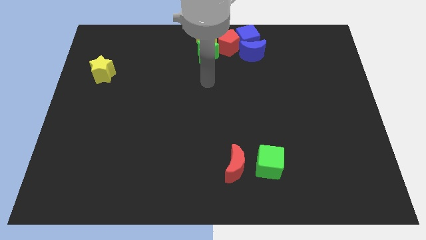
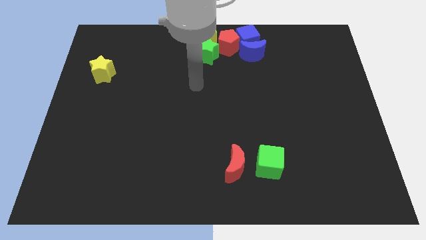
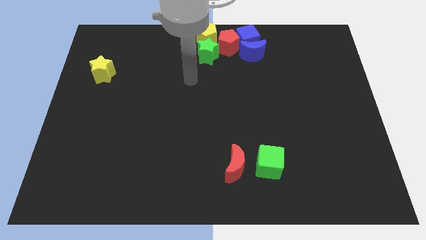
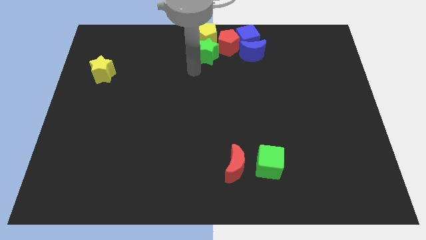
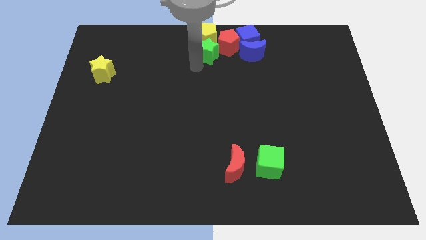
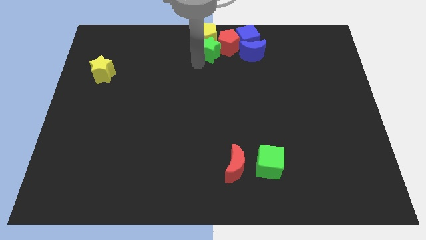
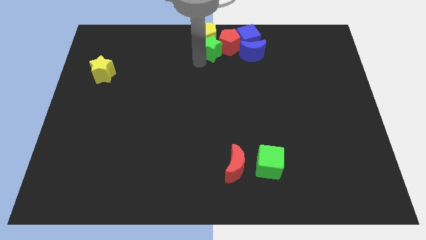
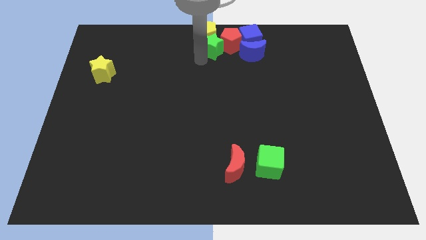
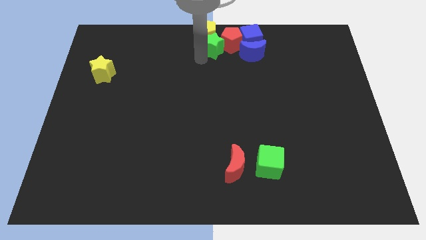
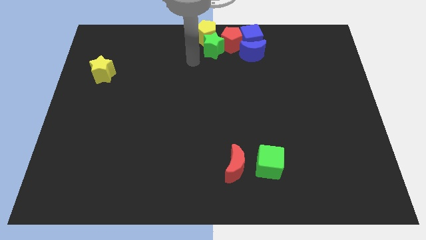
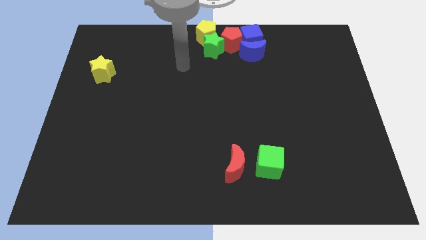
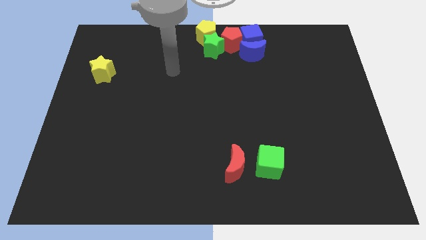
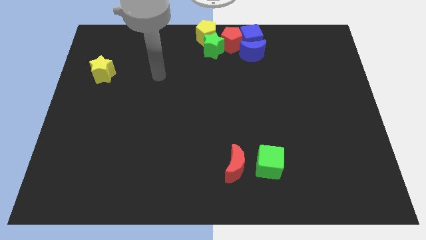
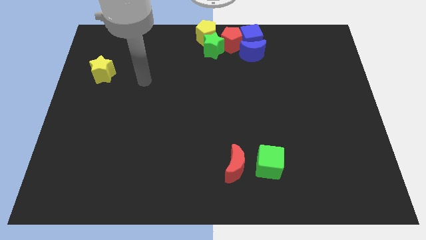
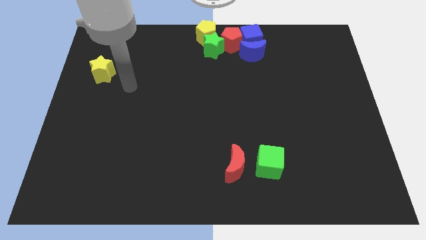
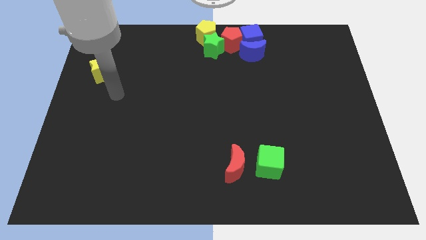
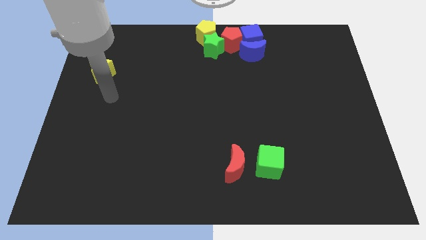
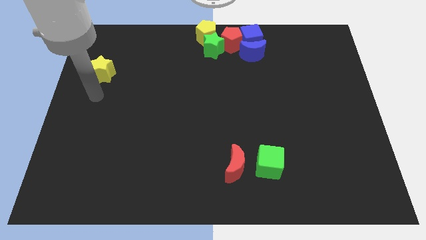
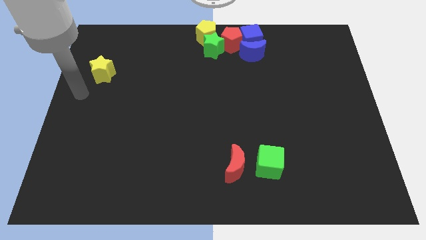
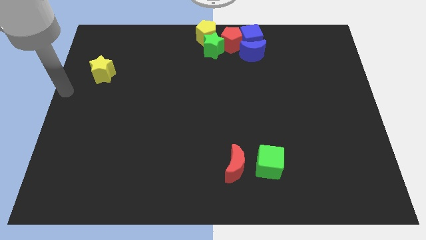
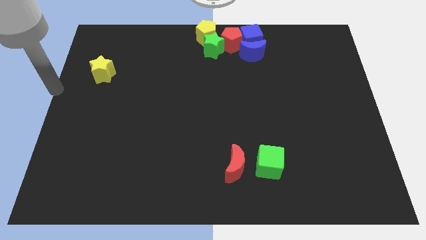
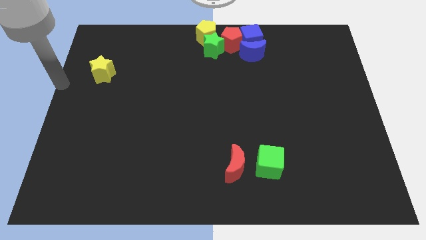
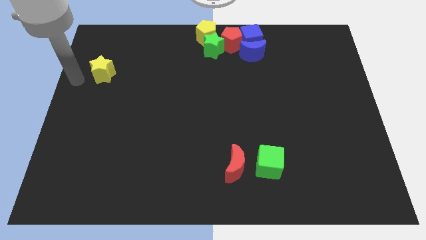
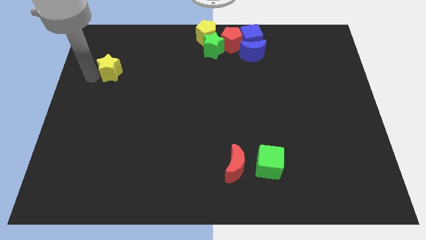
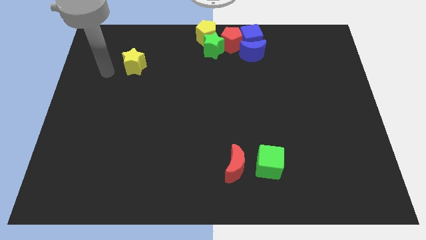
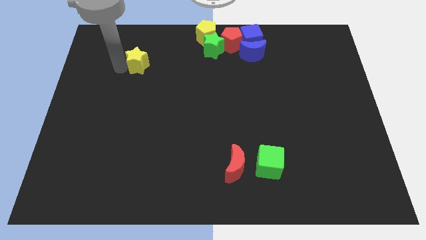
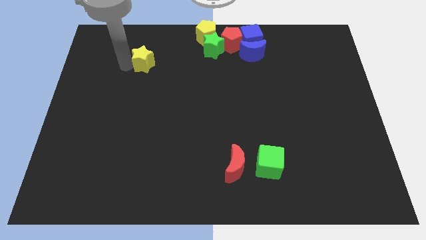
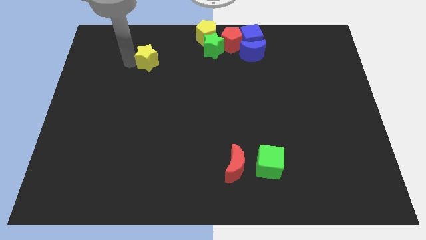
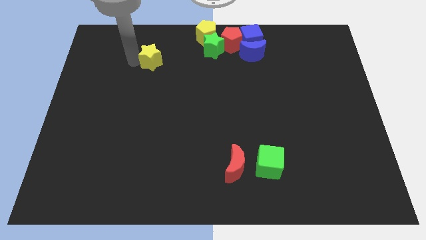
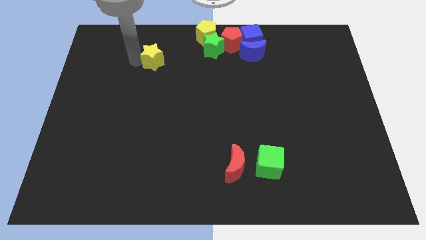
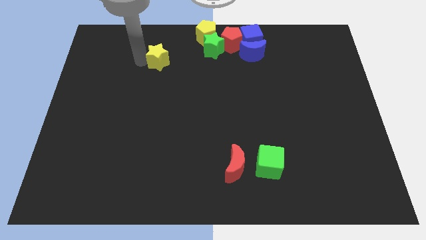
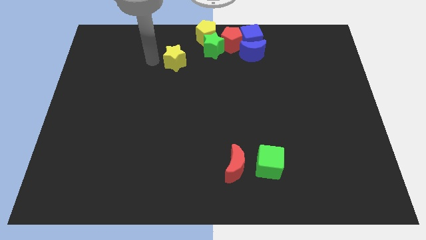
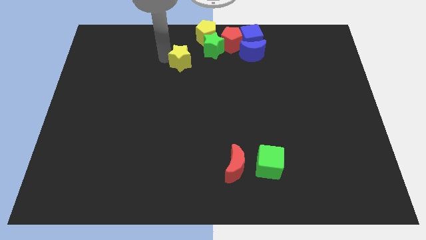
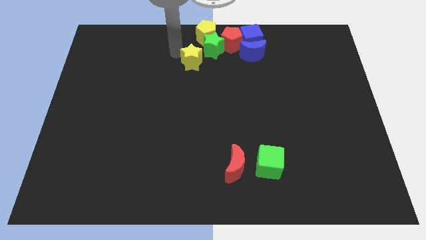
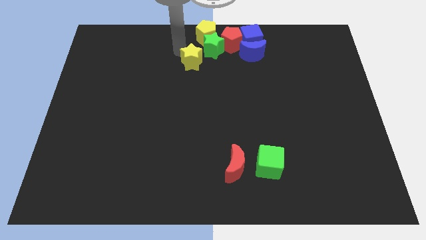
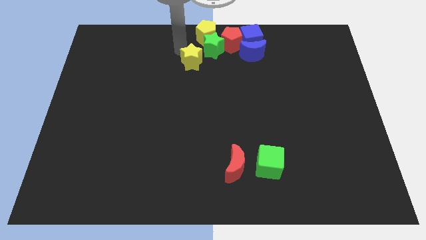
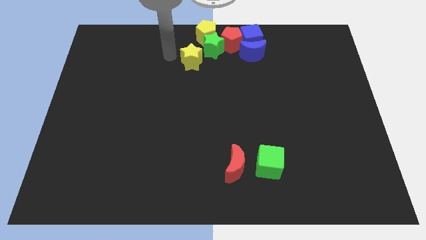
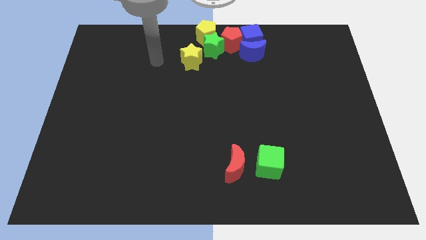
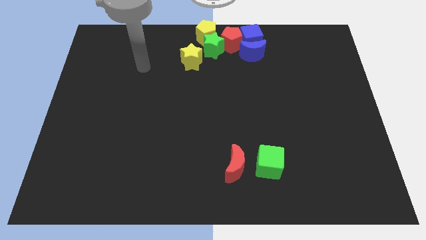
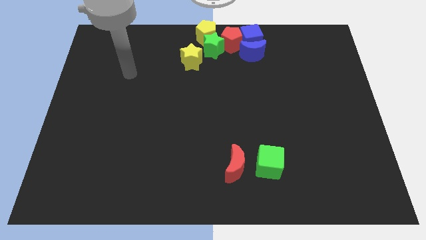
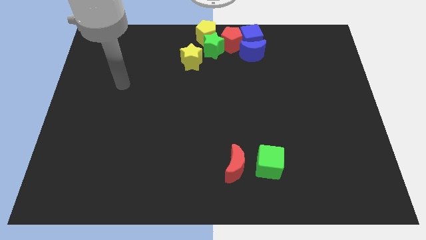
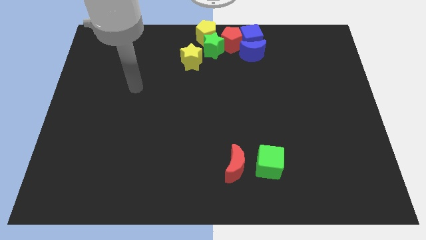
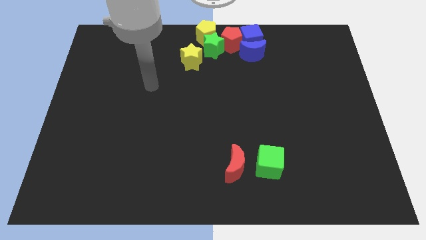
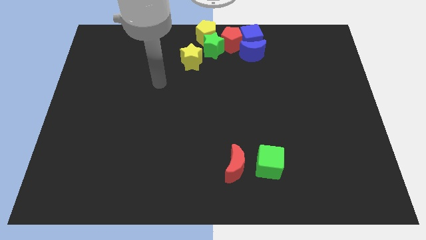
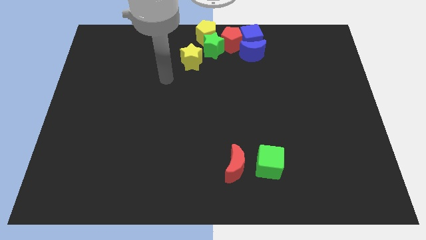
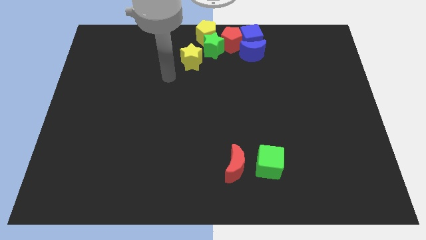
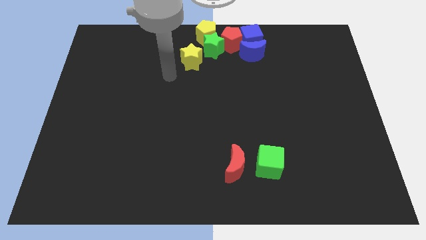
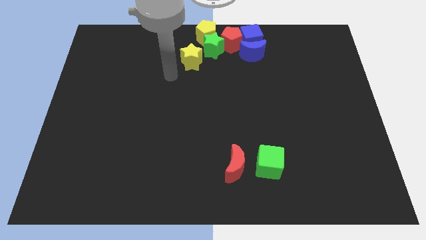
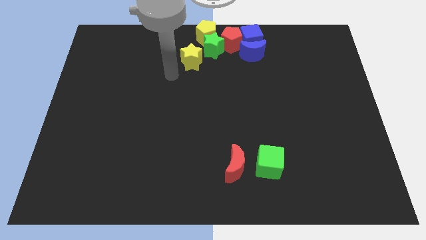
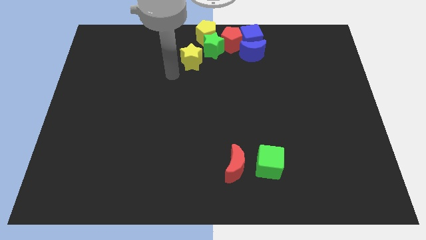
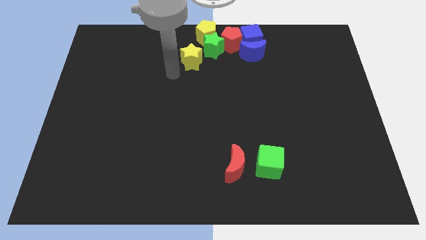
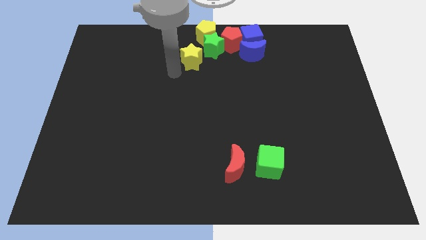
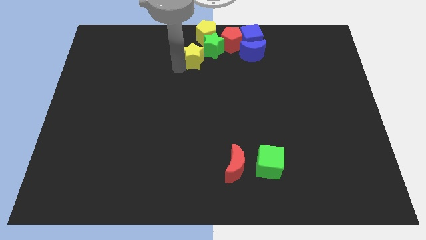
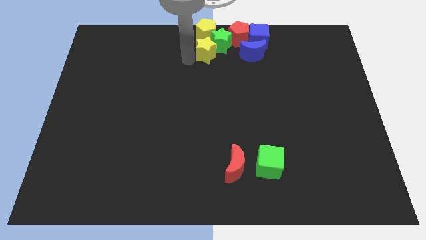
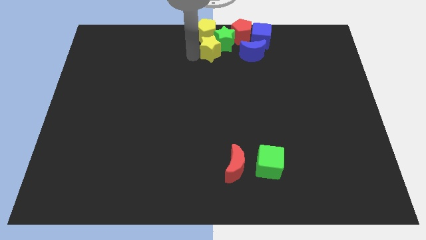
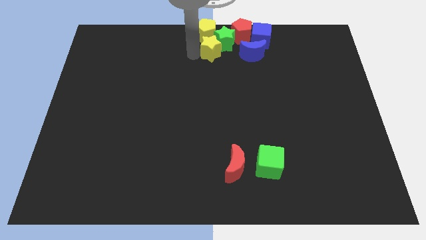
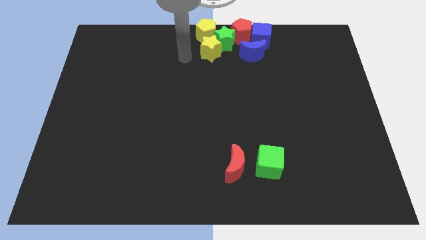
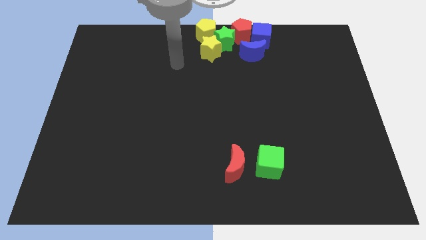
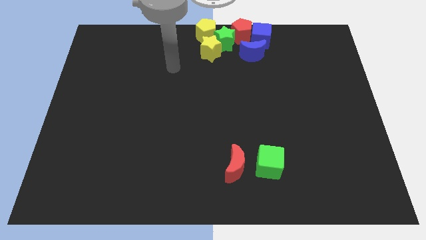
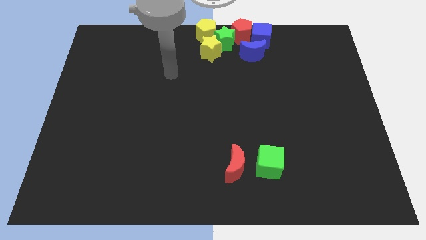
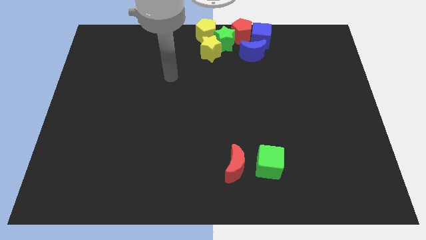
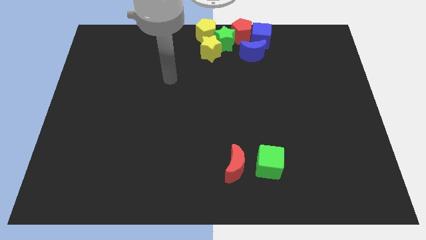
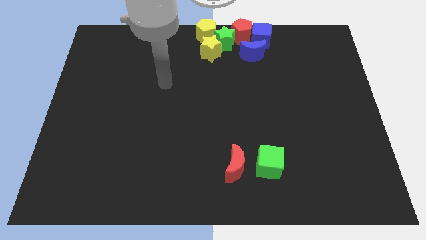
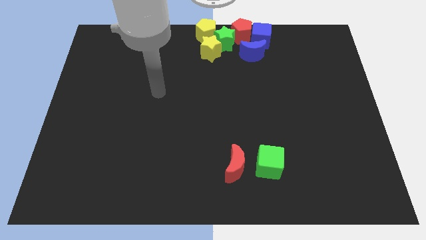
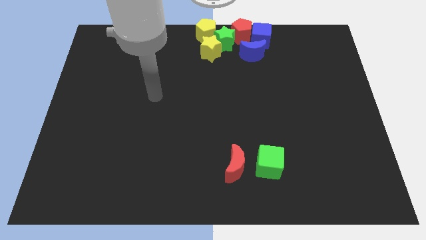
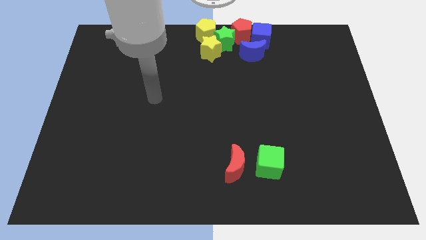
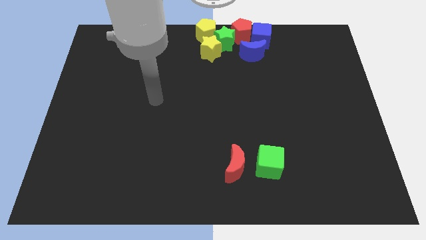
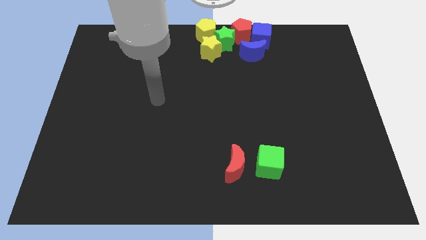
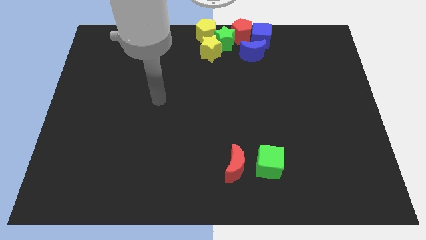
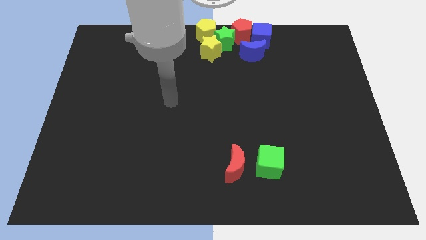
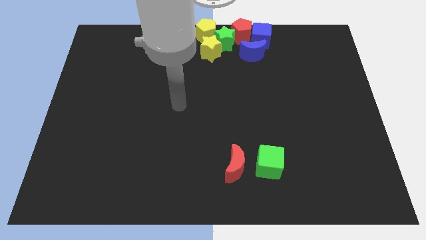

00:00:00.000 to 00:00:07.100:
move the yelllow star close the green star

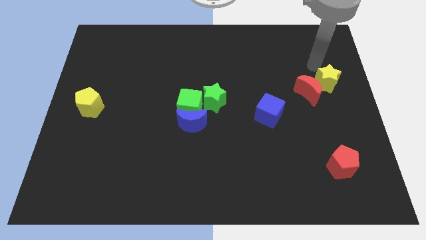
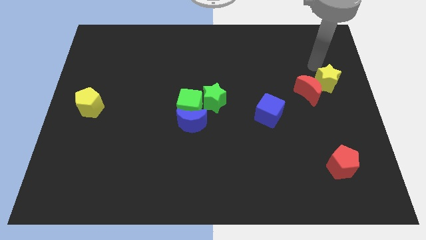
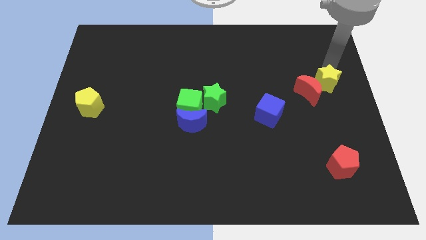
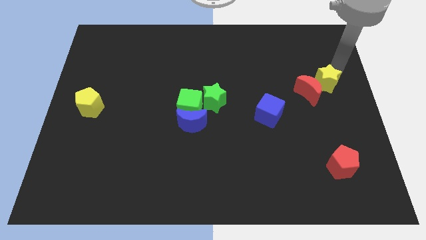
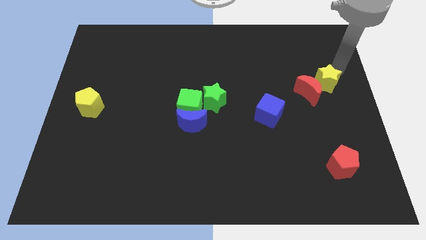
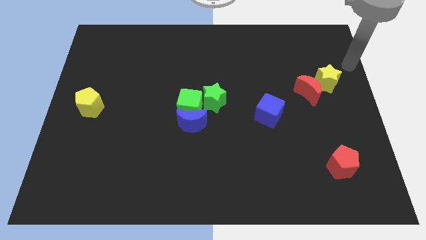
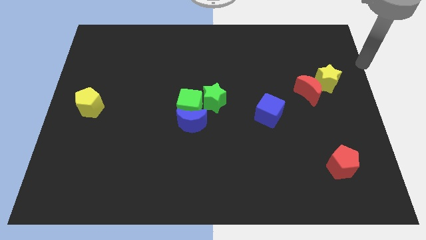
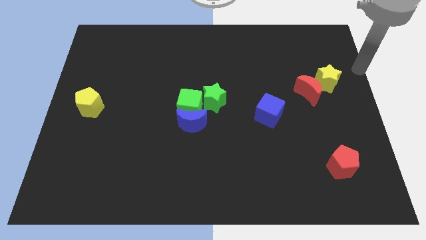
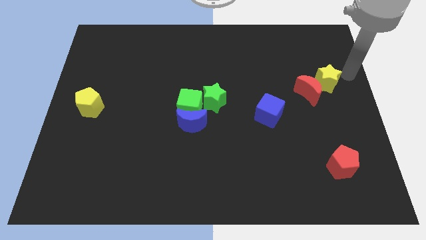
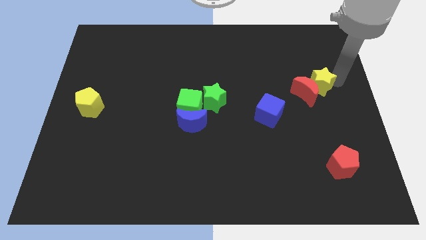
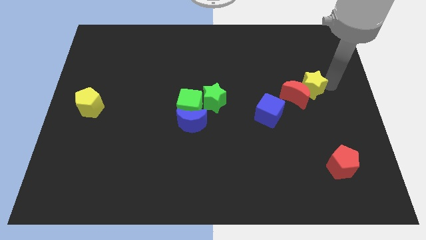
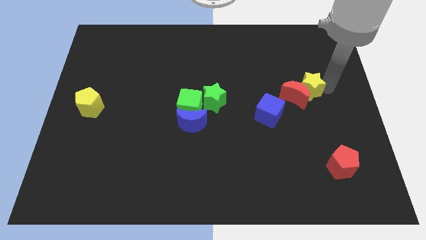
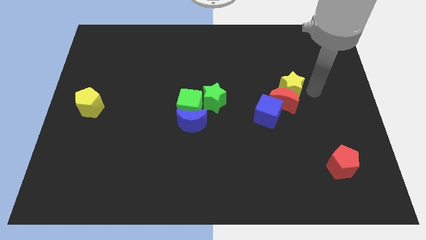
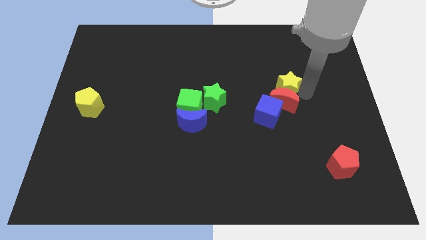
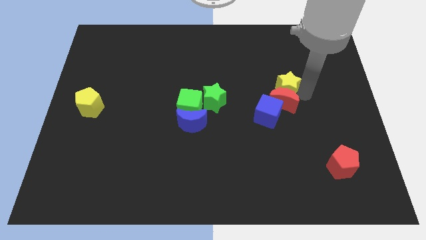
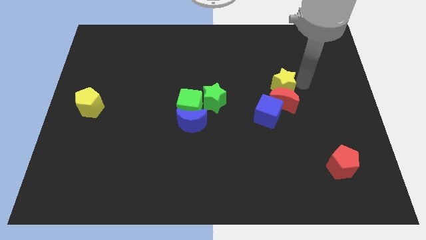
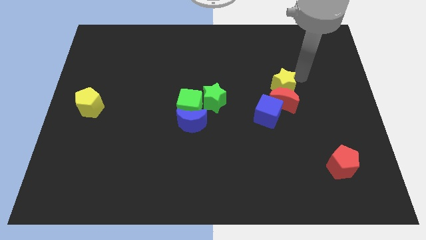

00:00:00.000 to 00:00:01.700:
push yellow star above red crescent

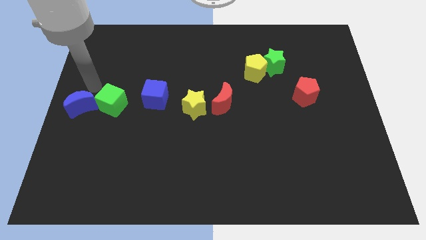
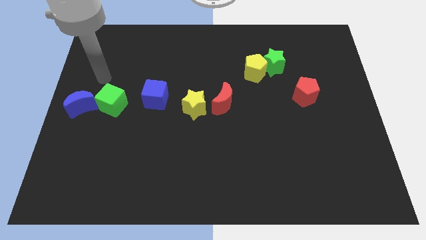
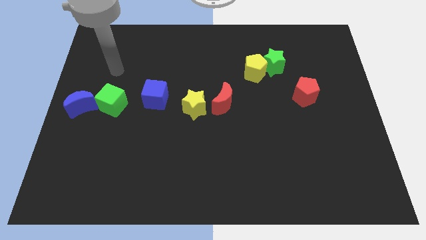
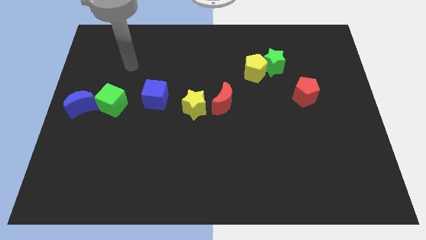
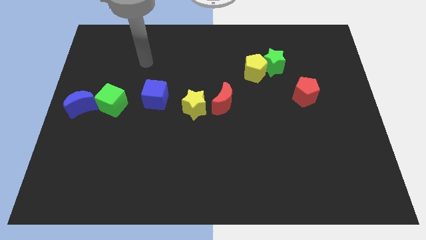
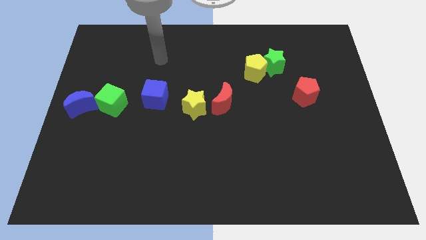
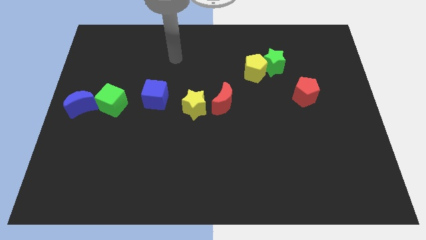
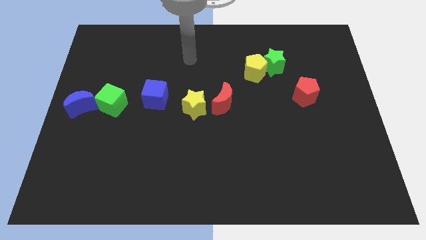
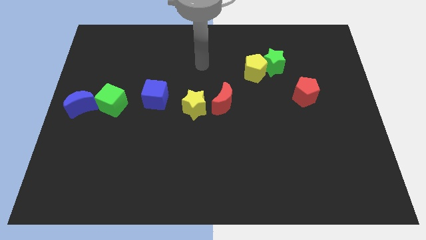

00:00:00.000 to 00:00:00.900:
point your hand at the top side of the yellow star
